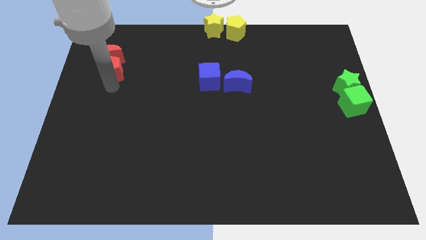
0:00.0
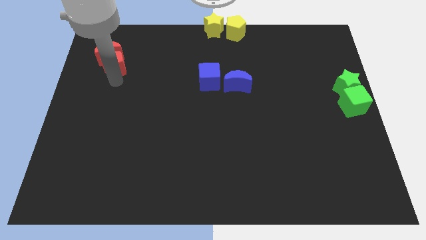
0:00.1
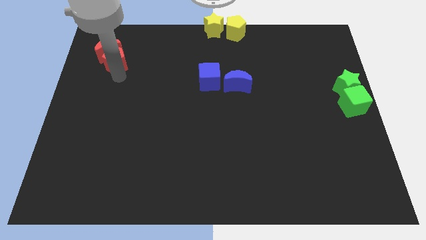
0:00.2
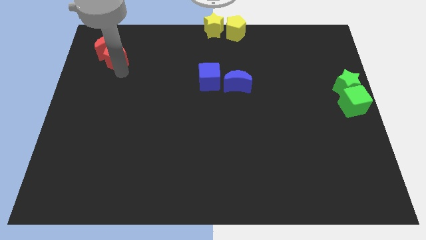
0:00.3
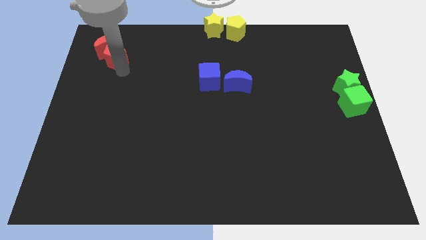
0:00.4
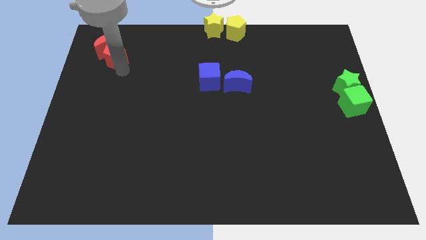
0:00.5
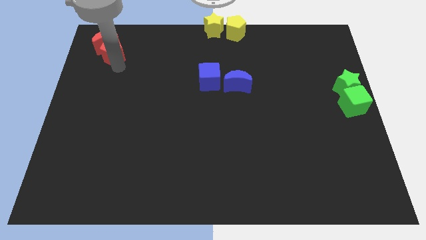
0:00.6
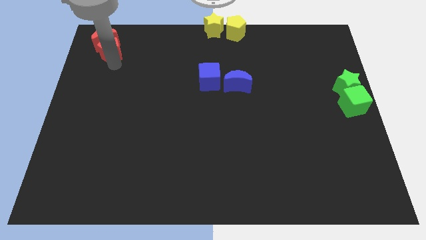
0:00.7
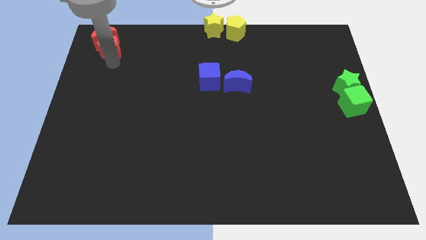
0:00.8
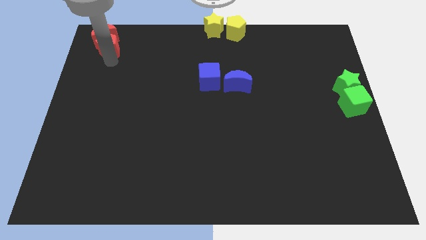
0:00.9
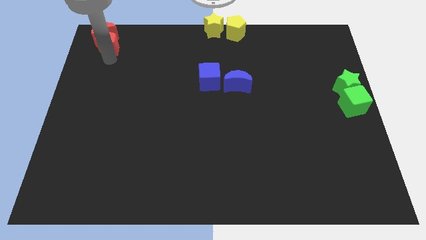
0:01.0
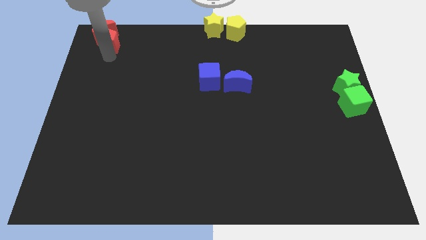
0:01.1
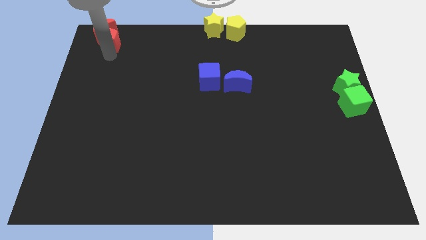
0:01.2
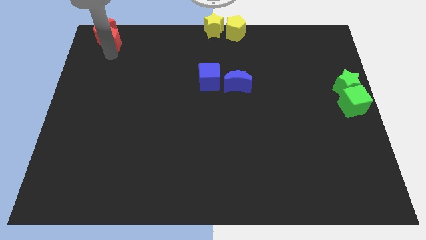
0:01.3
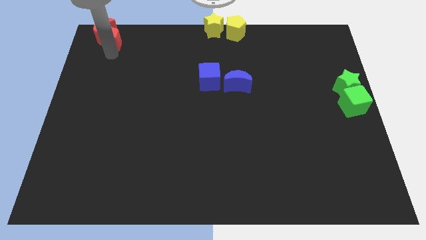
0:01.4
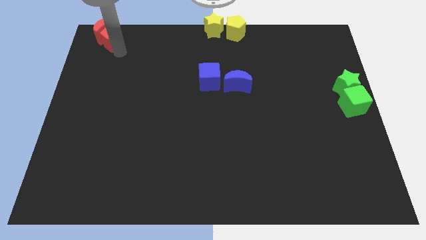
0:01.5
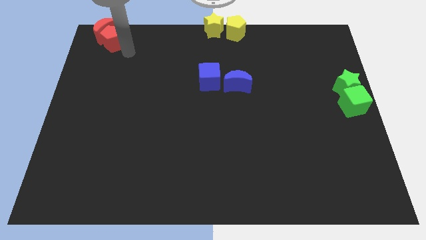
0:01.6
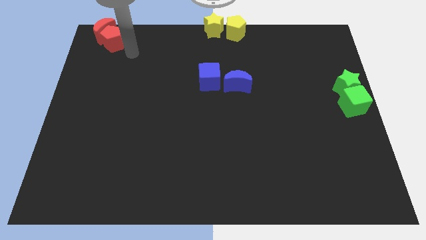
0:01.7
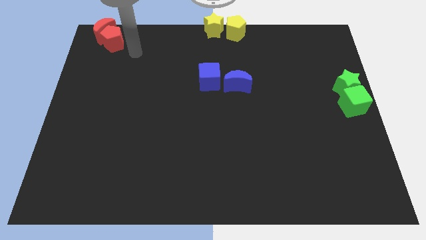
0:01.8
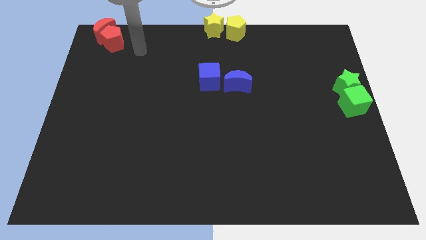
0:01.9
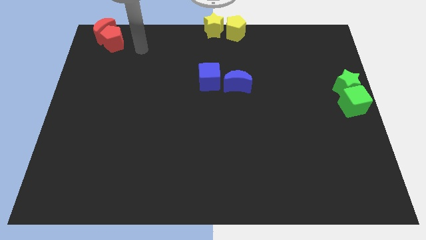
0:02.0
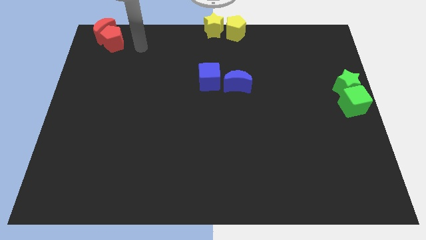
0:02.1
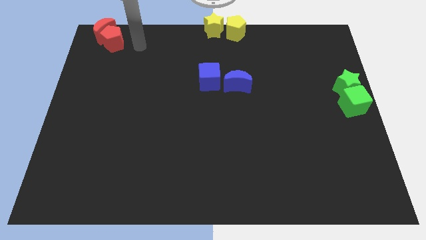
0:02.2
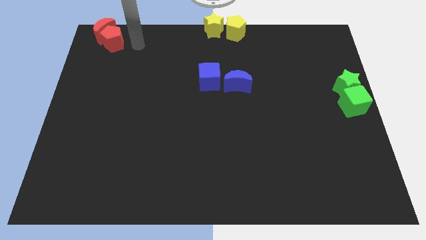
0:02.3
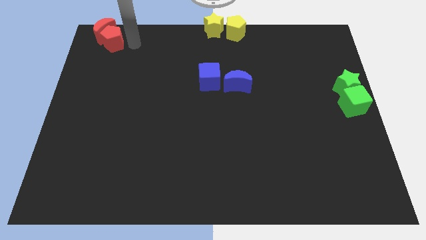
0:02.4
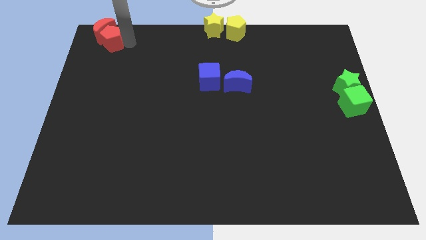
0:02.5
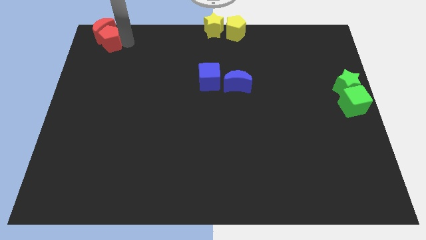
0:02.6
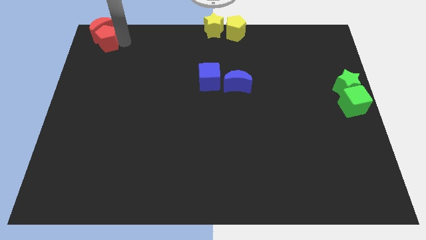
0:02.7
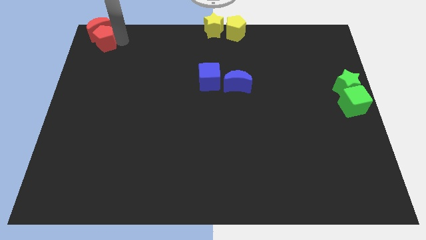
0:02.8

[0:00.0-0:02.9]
move the red pentagon and red crescent to the top left corner of the board

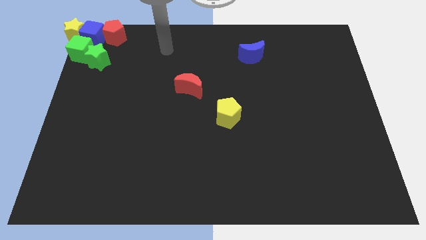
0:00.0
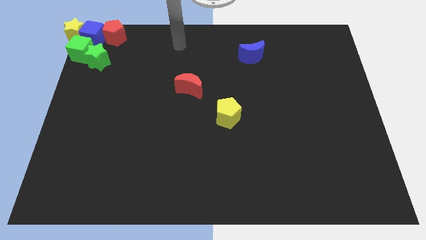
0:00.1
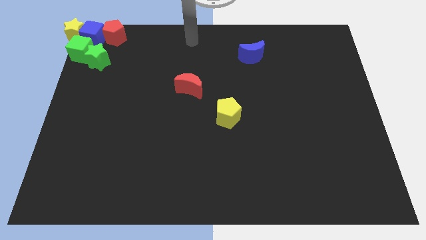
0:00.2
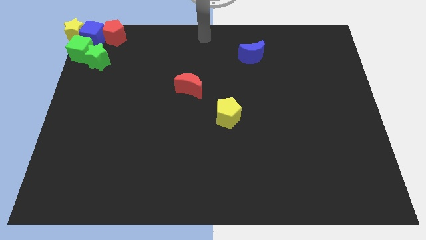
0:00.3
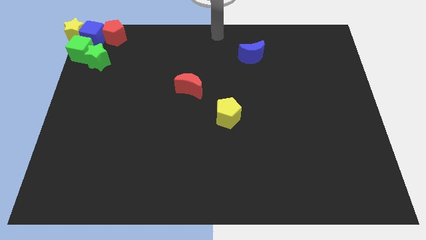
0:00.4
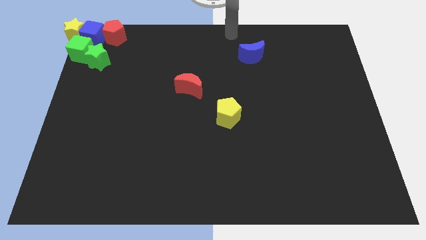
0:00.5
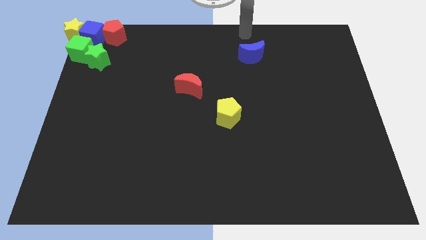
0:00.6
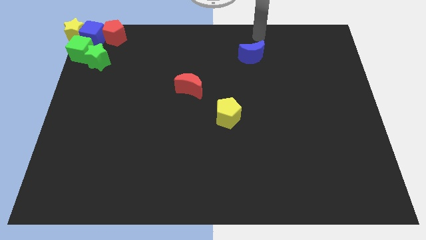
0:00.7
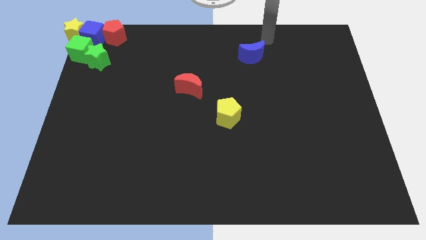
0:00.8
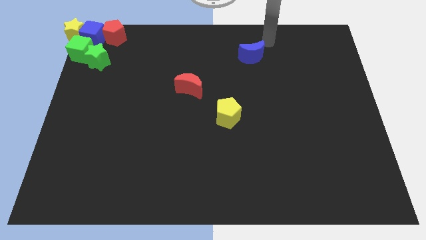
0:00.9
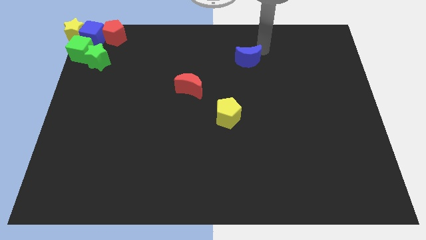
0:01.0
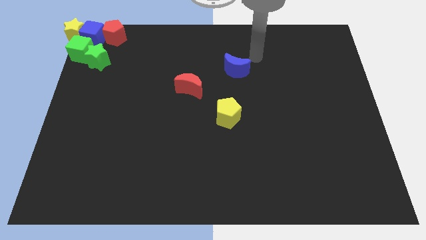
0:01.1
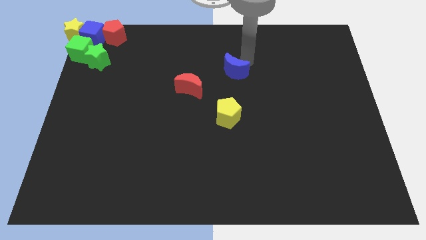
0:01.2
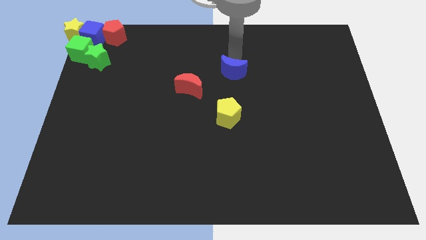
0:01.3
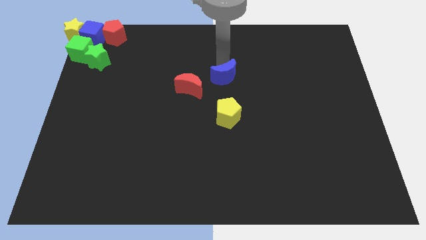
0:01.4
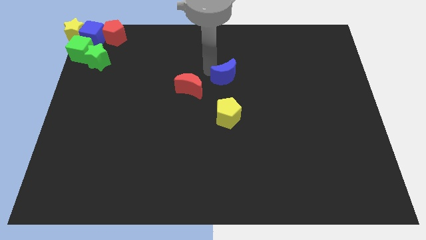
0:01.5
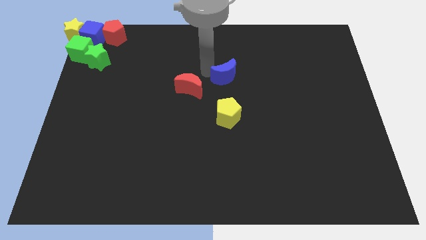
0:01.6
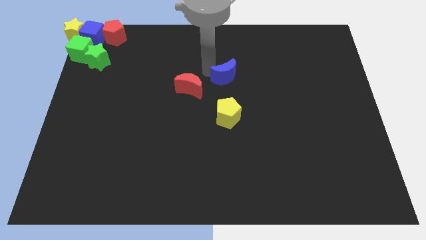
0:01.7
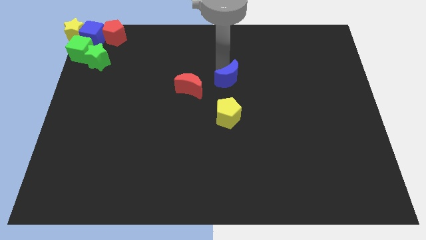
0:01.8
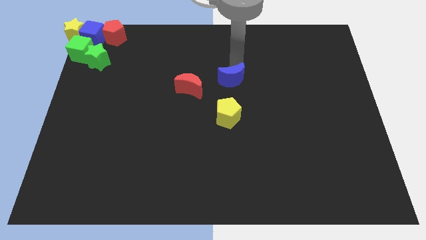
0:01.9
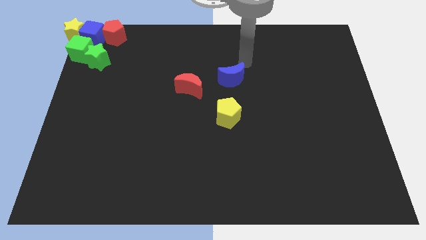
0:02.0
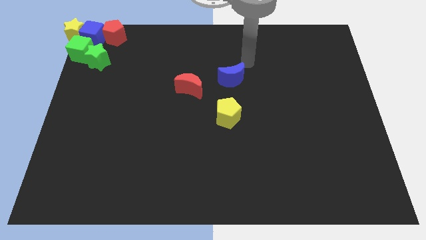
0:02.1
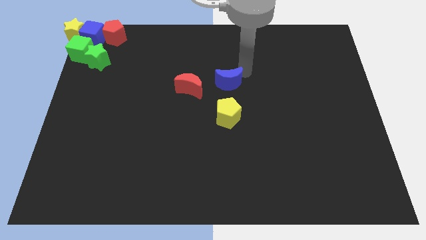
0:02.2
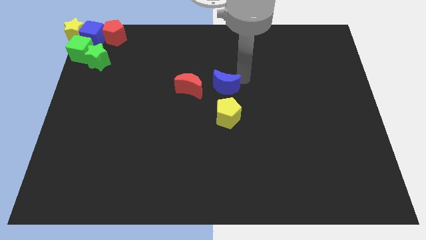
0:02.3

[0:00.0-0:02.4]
push the blue crescent above the yellow pentagon

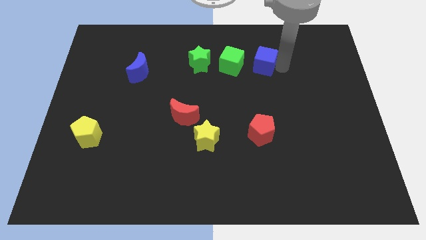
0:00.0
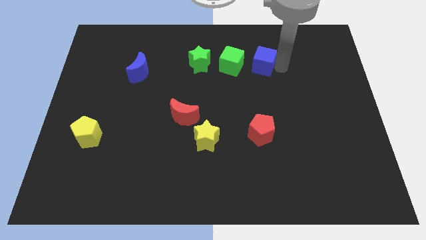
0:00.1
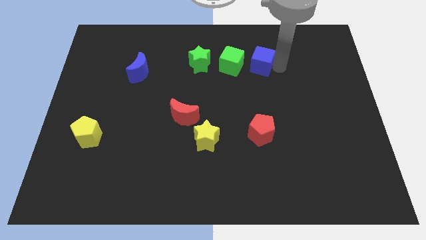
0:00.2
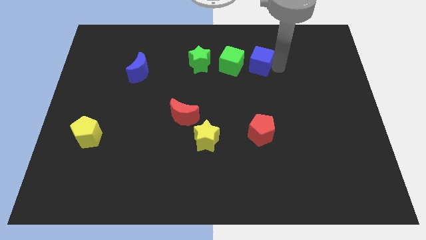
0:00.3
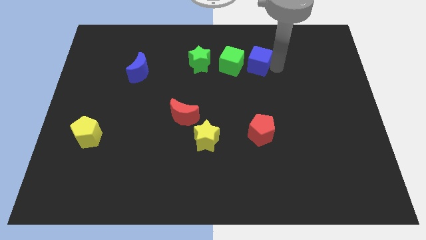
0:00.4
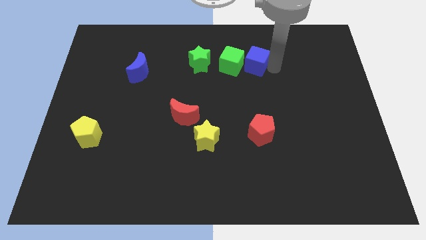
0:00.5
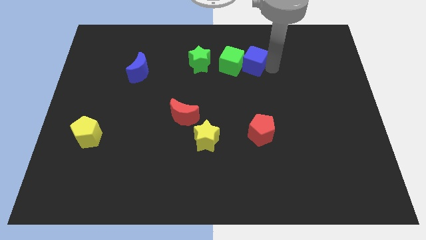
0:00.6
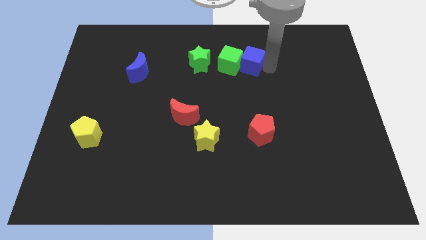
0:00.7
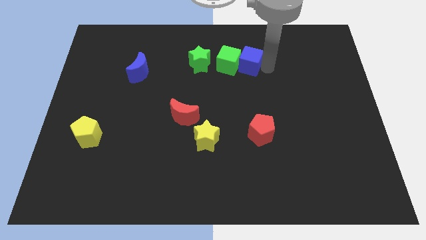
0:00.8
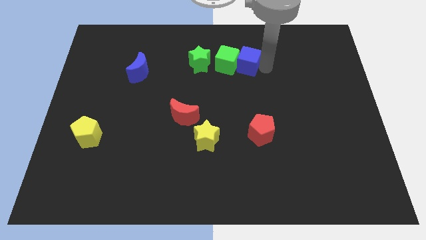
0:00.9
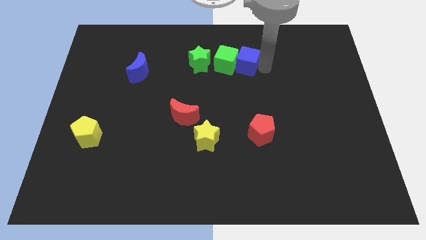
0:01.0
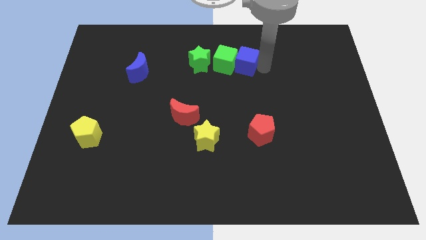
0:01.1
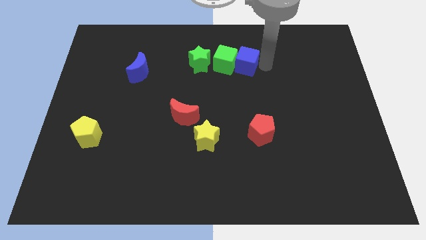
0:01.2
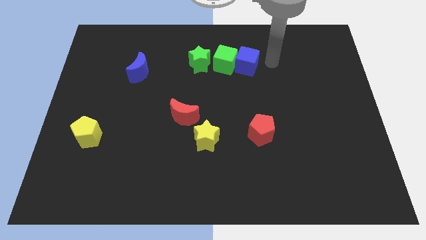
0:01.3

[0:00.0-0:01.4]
push the blue cube into the green cube

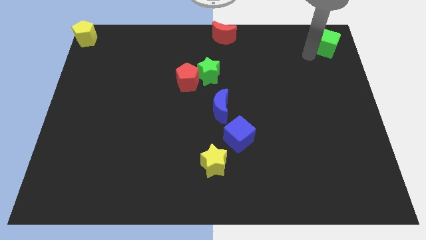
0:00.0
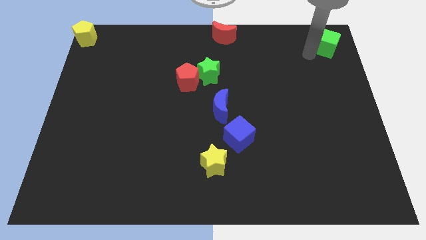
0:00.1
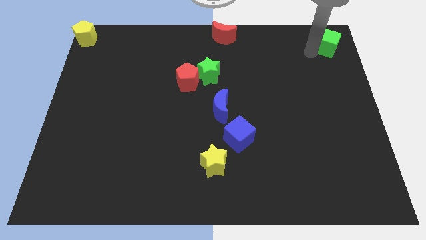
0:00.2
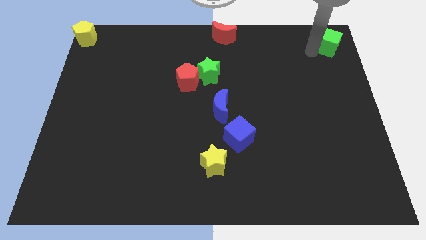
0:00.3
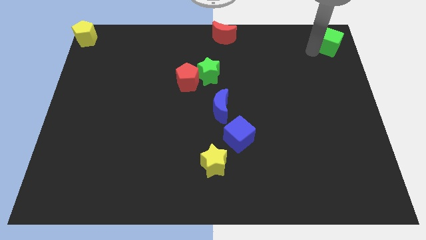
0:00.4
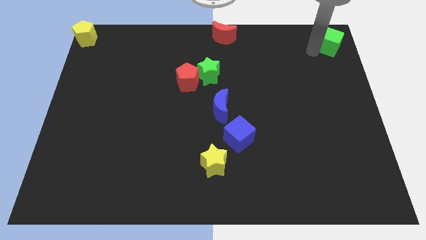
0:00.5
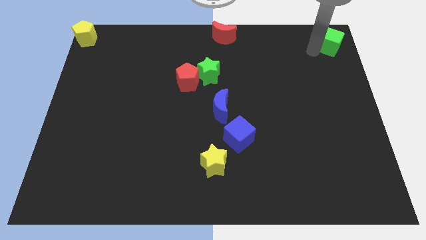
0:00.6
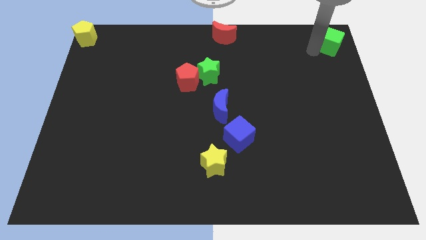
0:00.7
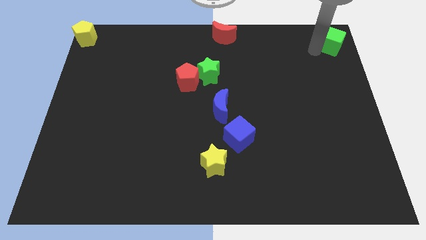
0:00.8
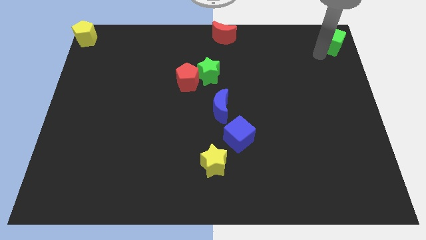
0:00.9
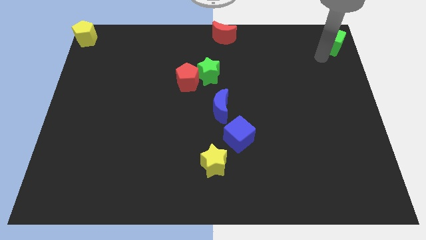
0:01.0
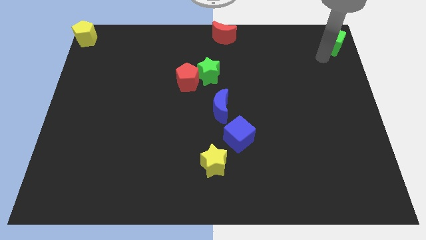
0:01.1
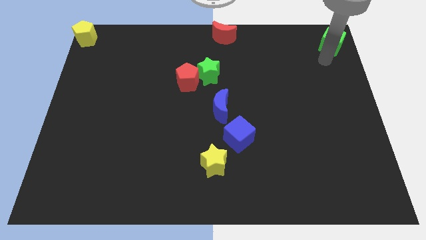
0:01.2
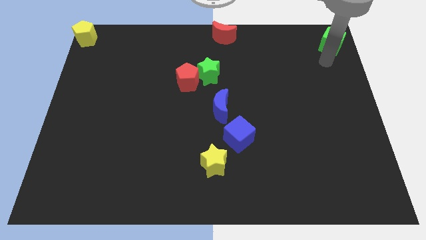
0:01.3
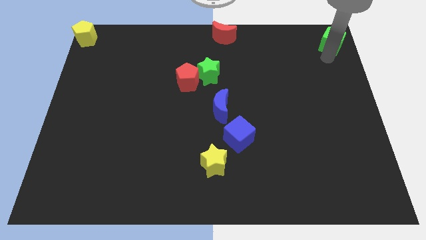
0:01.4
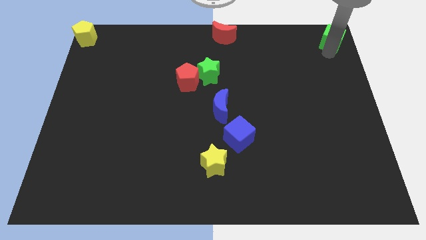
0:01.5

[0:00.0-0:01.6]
move the green cube to the top right of the board

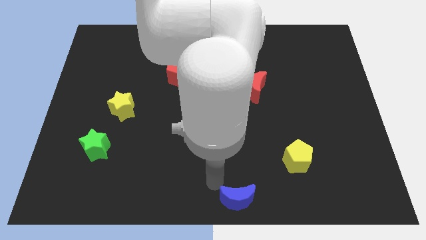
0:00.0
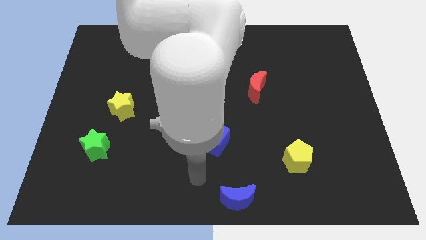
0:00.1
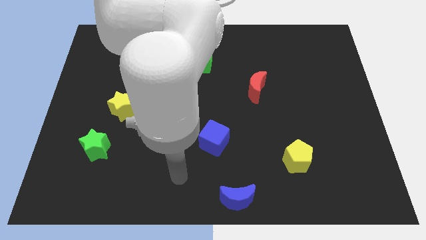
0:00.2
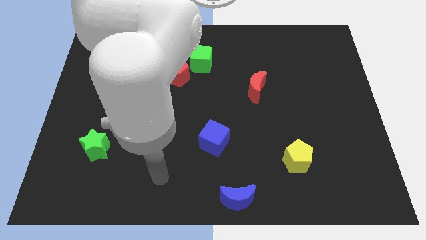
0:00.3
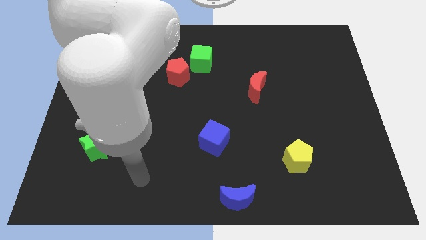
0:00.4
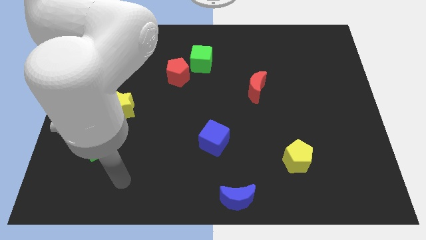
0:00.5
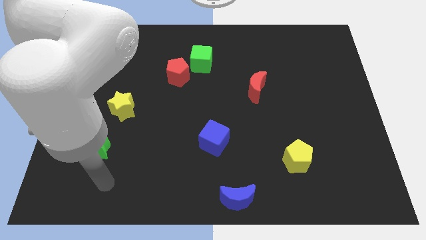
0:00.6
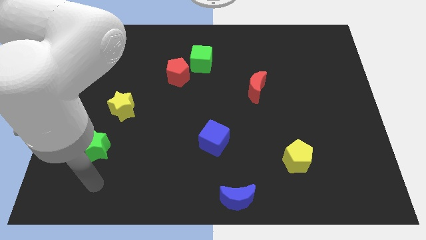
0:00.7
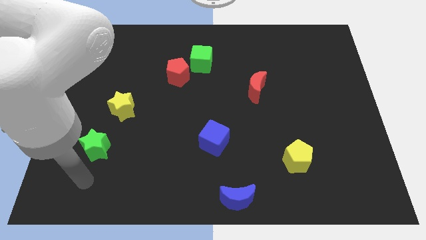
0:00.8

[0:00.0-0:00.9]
place yourself below green star
